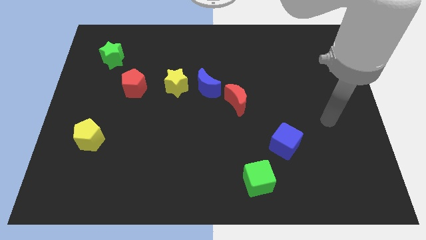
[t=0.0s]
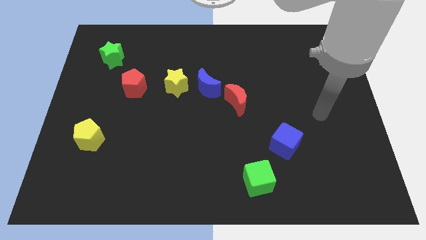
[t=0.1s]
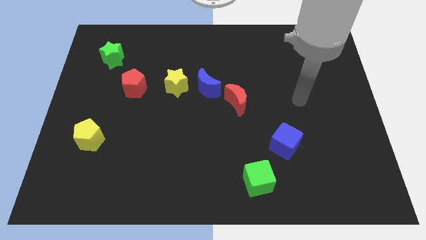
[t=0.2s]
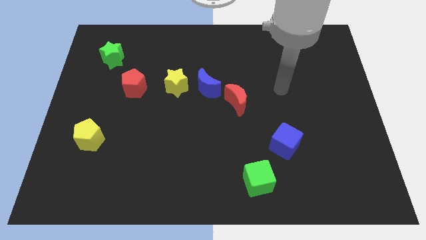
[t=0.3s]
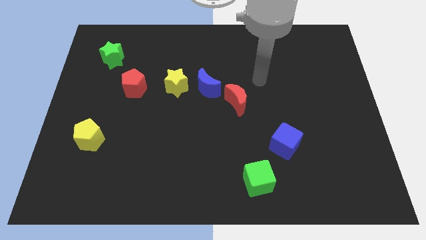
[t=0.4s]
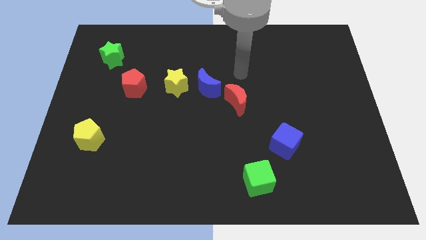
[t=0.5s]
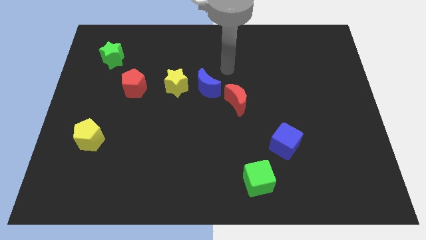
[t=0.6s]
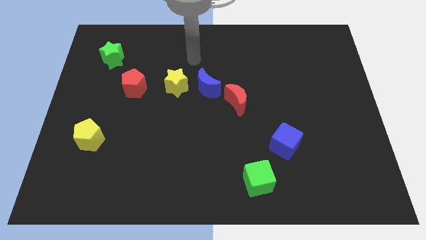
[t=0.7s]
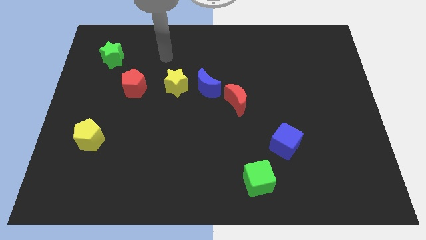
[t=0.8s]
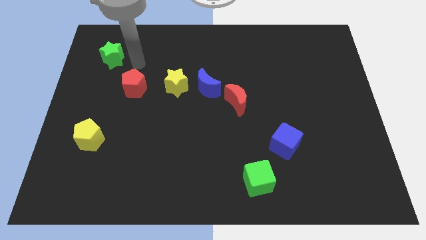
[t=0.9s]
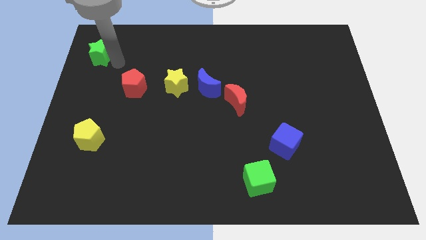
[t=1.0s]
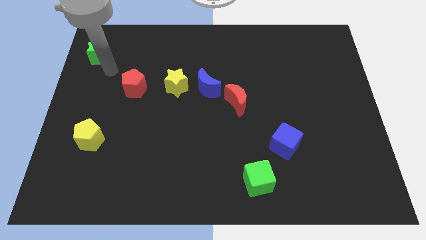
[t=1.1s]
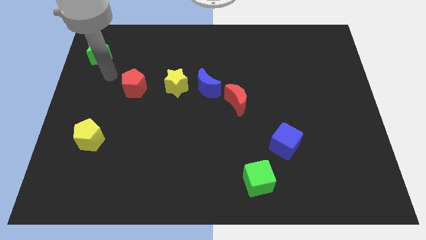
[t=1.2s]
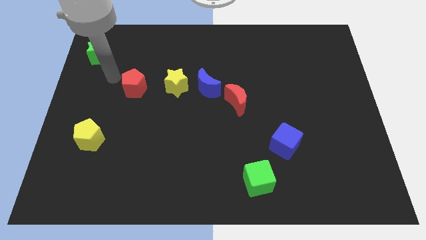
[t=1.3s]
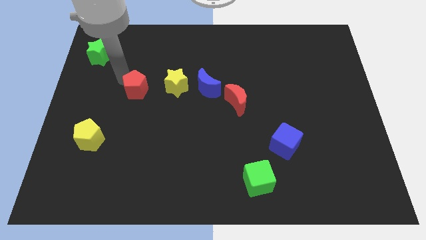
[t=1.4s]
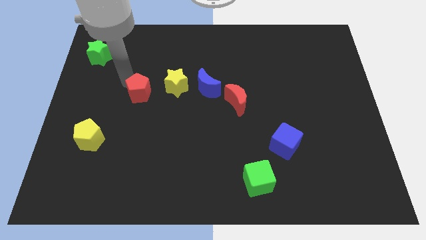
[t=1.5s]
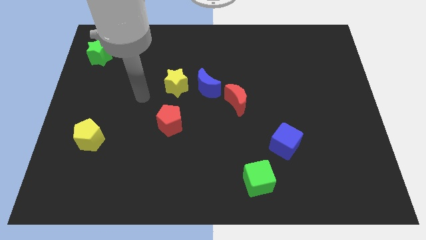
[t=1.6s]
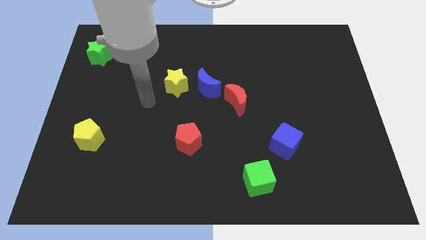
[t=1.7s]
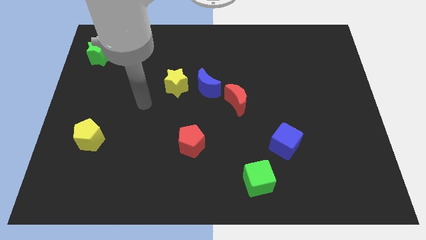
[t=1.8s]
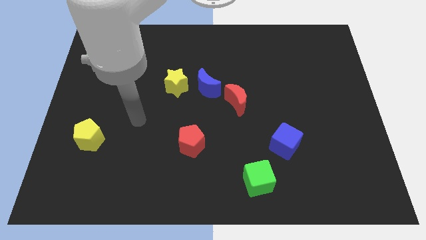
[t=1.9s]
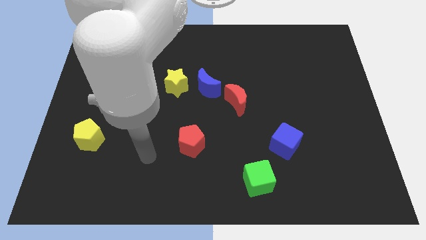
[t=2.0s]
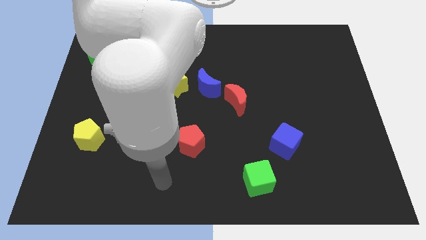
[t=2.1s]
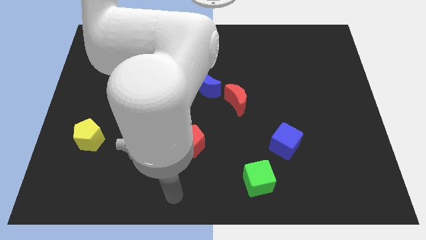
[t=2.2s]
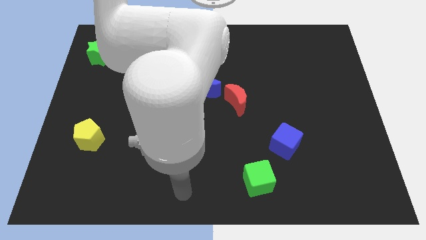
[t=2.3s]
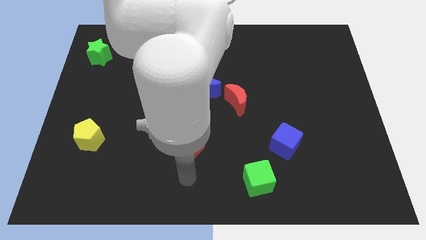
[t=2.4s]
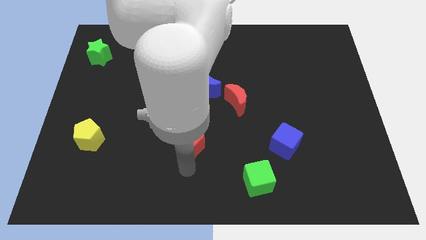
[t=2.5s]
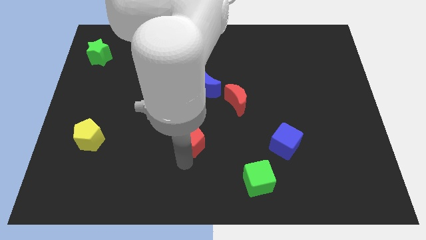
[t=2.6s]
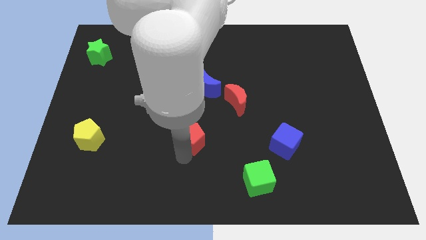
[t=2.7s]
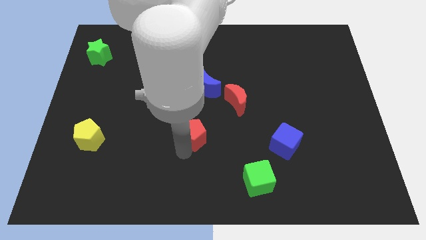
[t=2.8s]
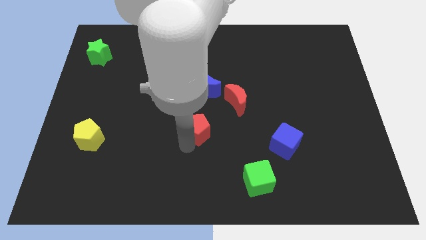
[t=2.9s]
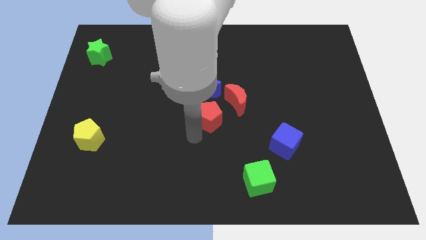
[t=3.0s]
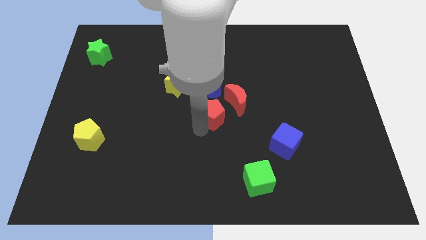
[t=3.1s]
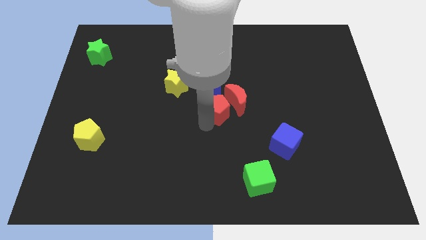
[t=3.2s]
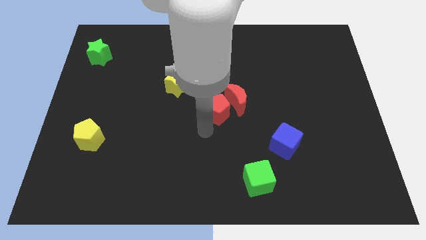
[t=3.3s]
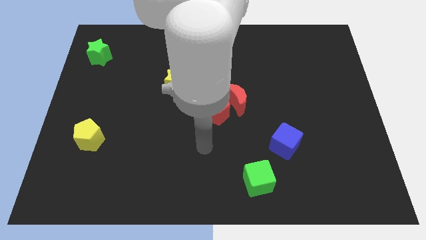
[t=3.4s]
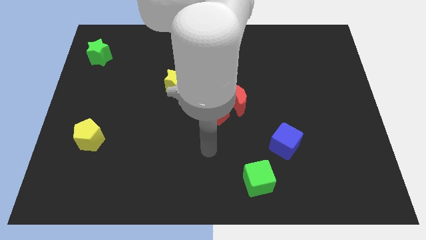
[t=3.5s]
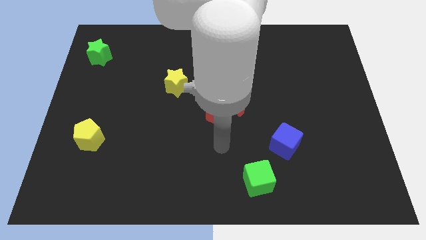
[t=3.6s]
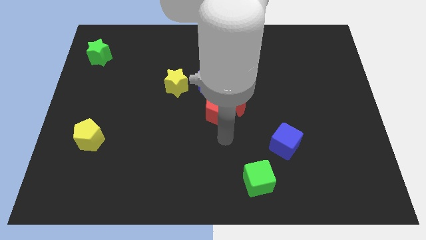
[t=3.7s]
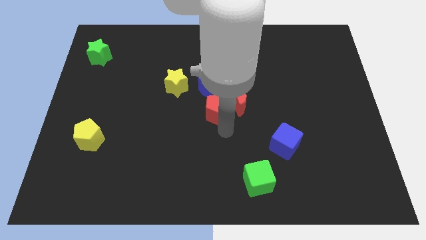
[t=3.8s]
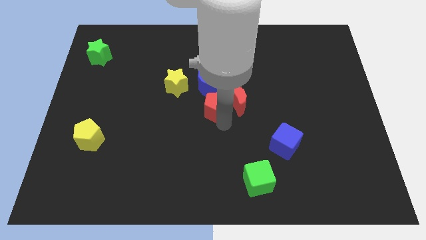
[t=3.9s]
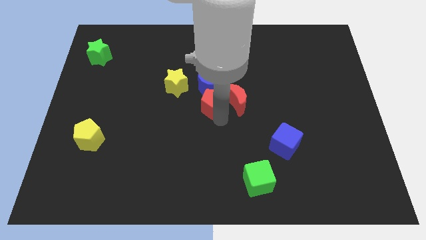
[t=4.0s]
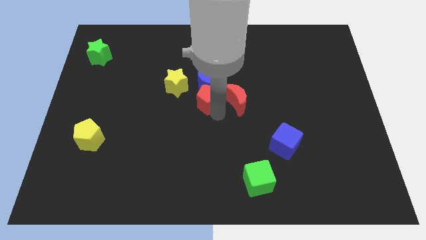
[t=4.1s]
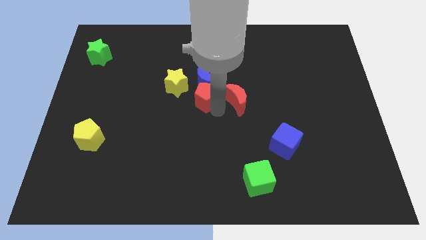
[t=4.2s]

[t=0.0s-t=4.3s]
put the red pentagon towards the blue moon

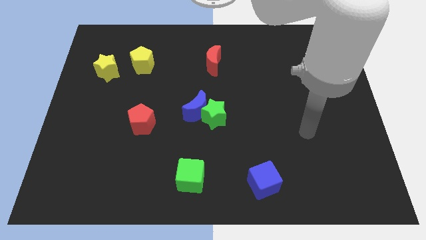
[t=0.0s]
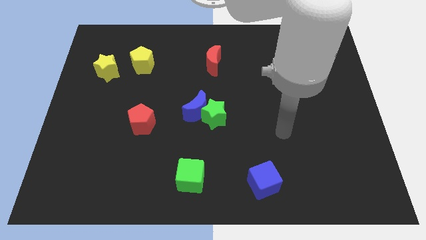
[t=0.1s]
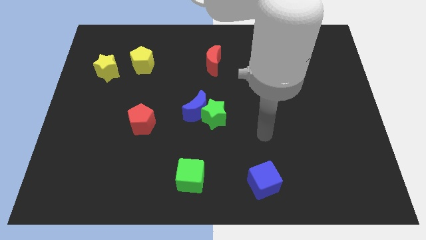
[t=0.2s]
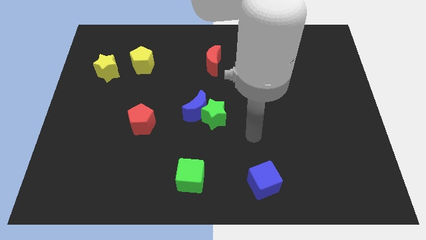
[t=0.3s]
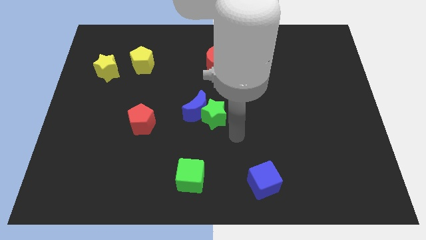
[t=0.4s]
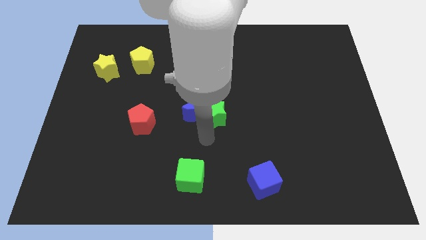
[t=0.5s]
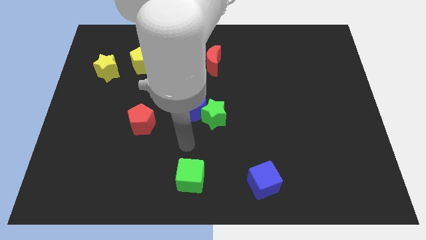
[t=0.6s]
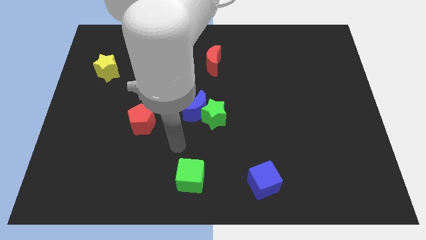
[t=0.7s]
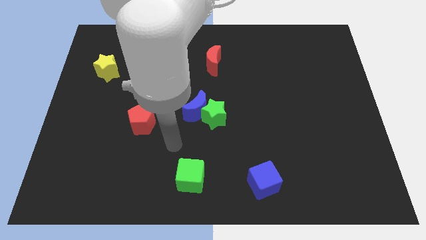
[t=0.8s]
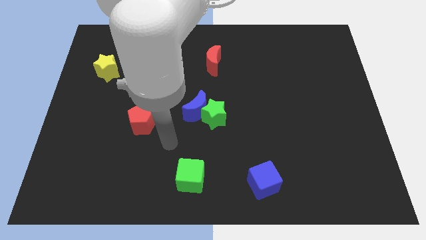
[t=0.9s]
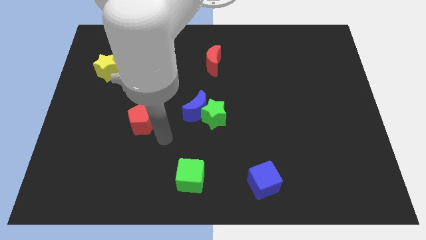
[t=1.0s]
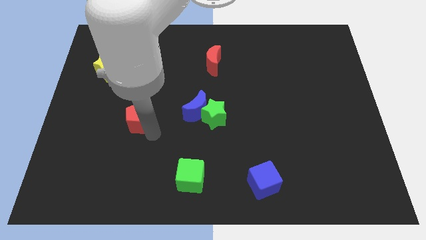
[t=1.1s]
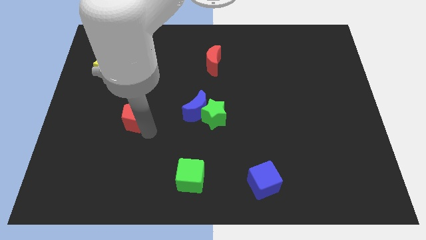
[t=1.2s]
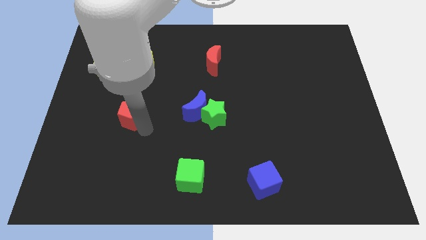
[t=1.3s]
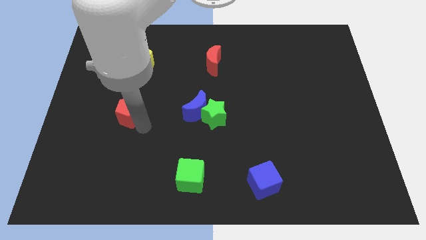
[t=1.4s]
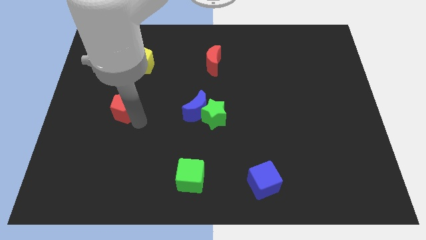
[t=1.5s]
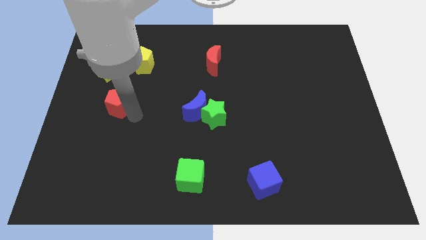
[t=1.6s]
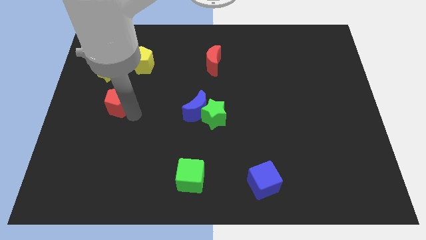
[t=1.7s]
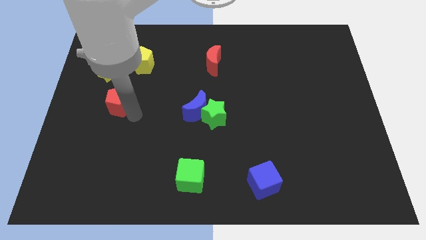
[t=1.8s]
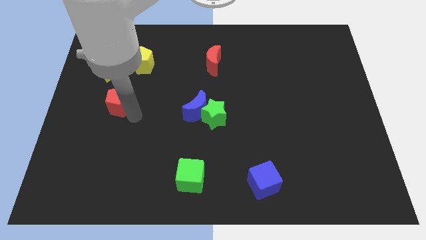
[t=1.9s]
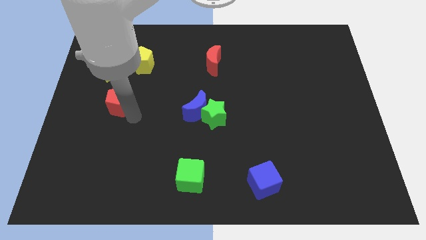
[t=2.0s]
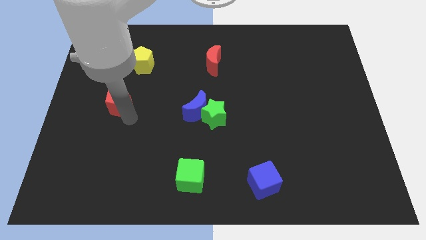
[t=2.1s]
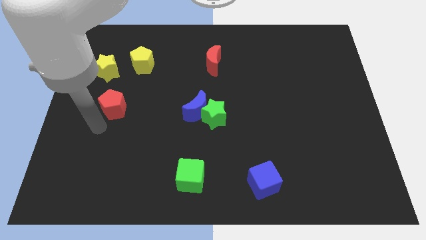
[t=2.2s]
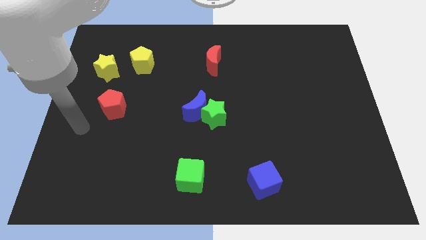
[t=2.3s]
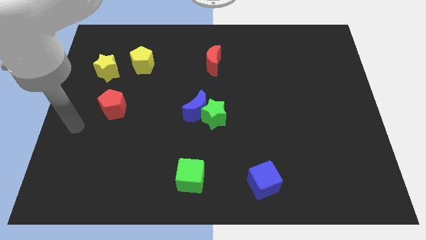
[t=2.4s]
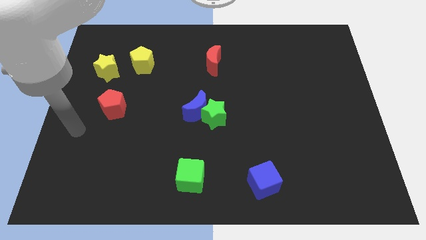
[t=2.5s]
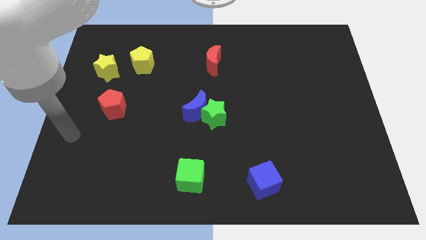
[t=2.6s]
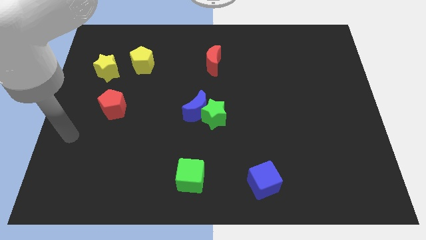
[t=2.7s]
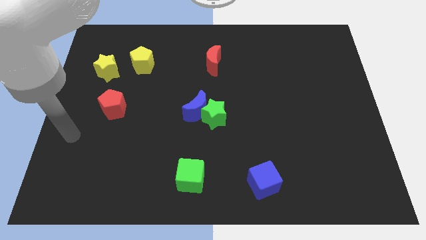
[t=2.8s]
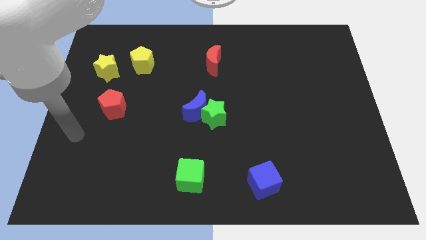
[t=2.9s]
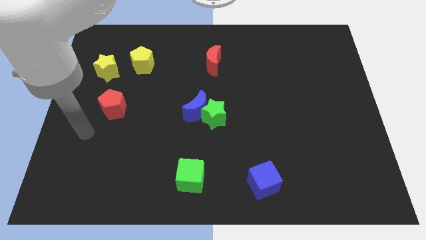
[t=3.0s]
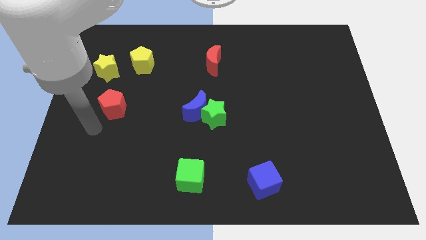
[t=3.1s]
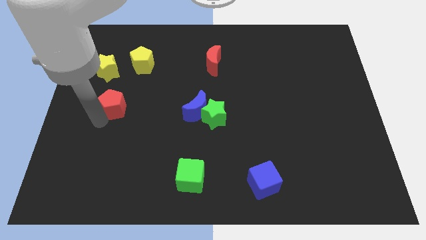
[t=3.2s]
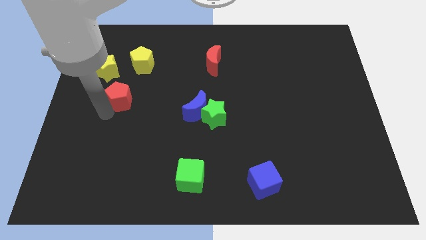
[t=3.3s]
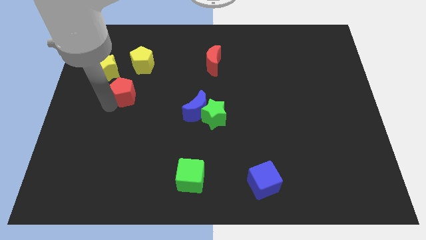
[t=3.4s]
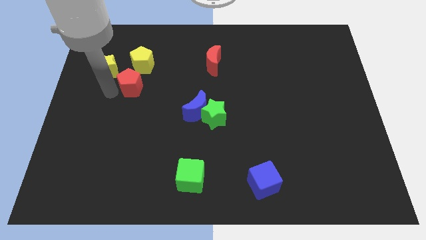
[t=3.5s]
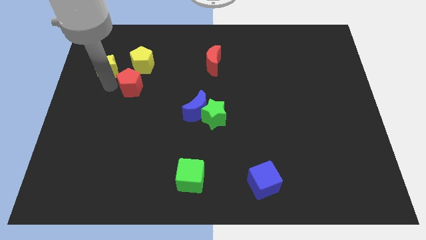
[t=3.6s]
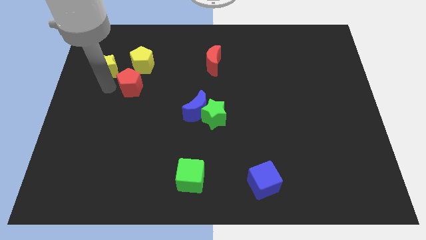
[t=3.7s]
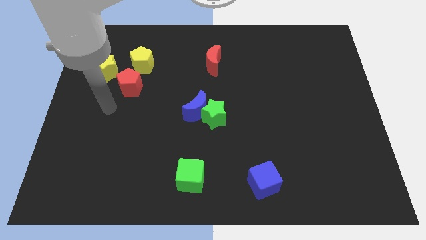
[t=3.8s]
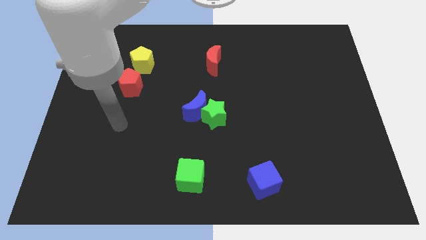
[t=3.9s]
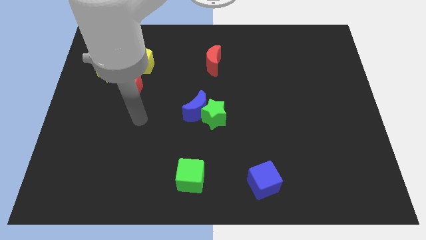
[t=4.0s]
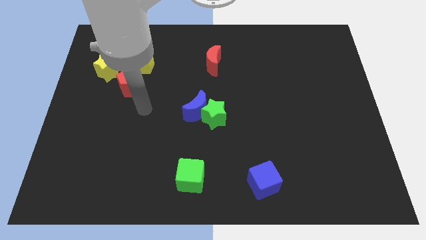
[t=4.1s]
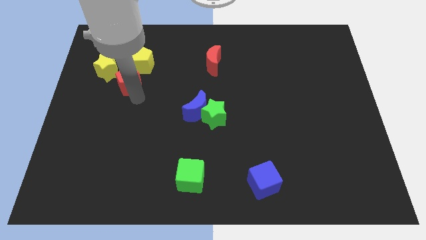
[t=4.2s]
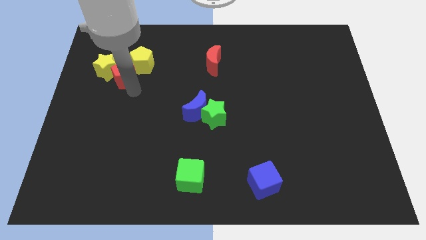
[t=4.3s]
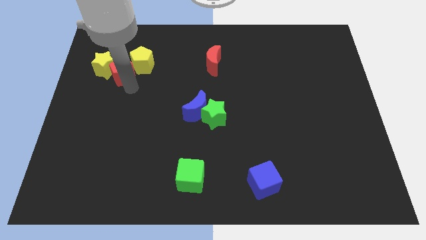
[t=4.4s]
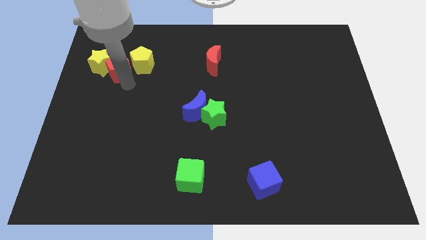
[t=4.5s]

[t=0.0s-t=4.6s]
push the red pentagon next to the yellow star
